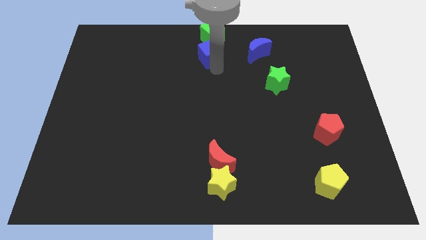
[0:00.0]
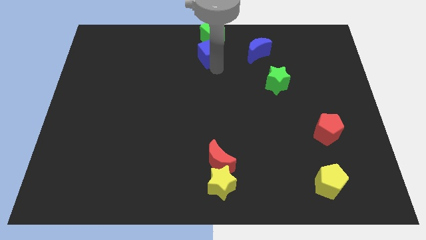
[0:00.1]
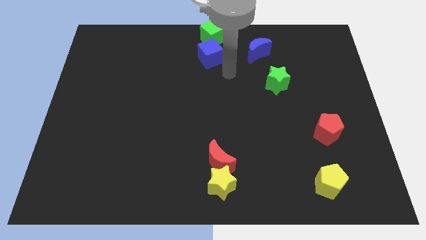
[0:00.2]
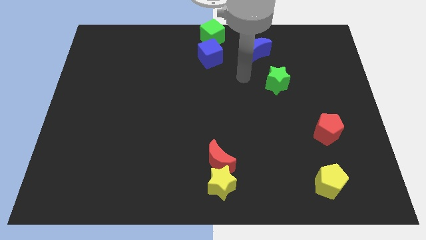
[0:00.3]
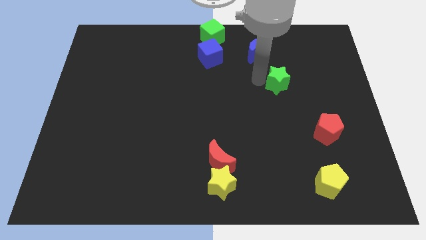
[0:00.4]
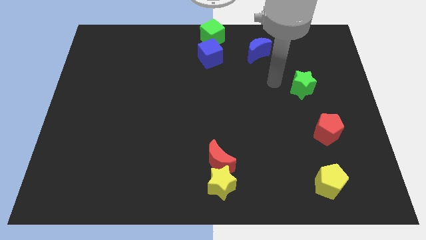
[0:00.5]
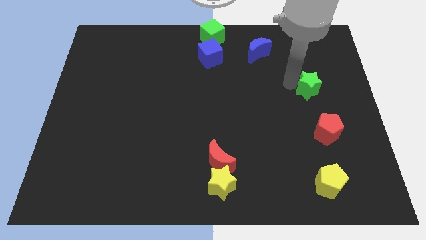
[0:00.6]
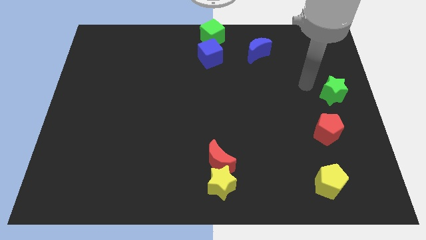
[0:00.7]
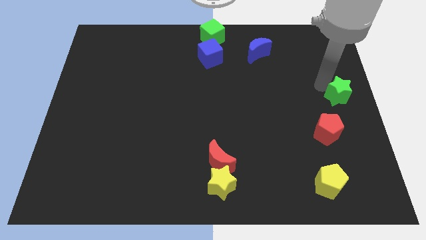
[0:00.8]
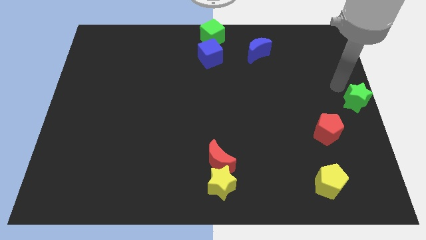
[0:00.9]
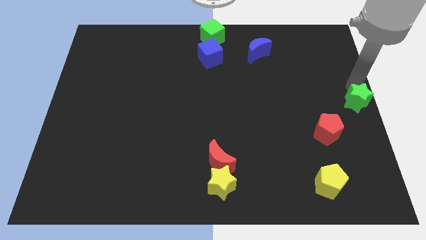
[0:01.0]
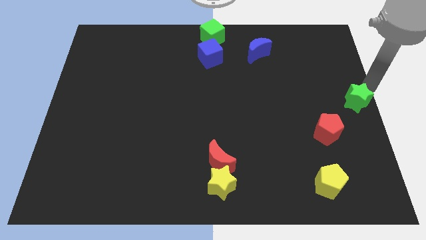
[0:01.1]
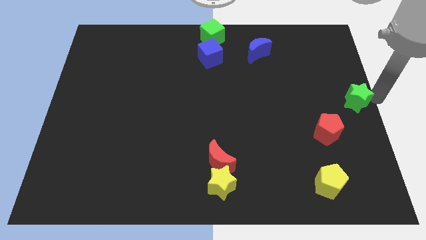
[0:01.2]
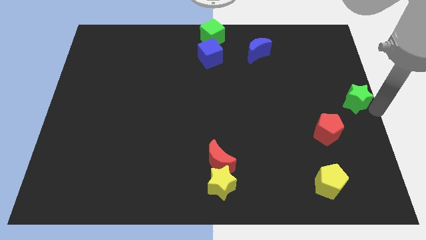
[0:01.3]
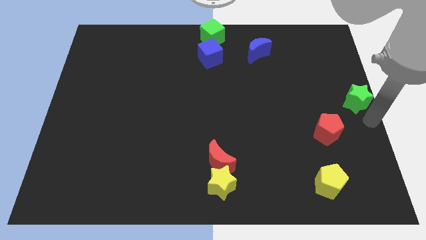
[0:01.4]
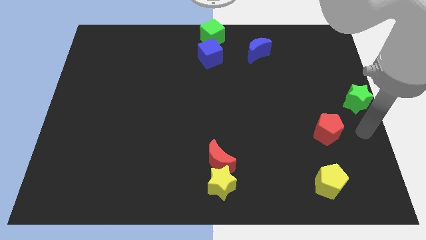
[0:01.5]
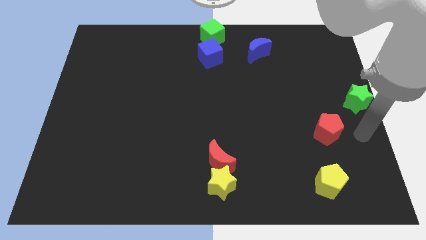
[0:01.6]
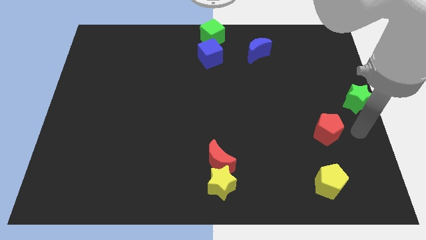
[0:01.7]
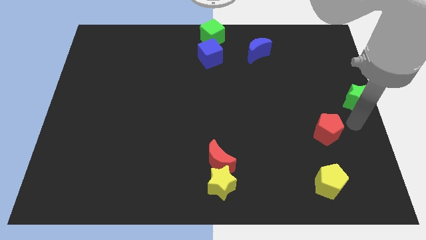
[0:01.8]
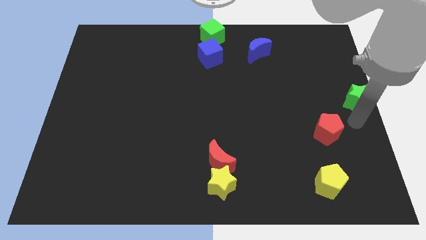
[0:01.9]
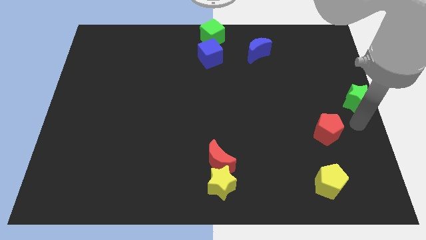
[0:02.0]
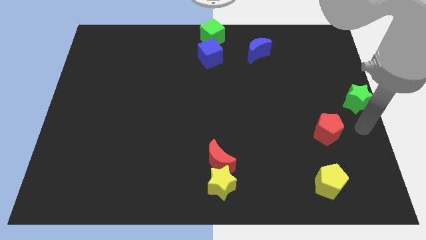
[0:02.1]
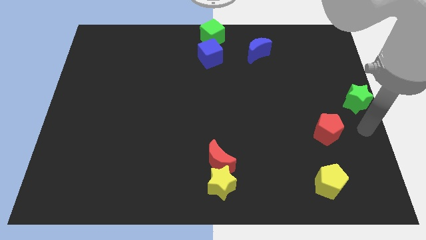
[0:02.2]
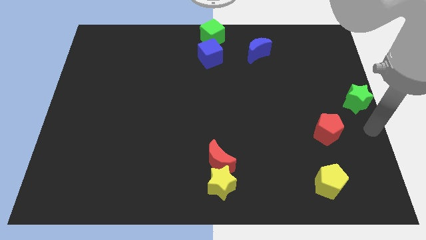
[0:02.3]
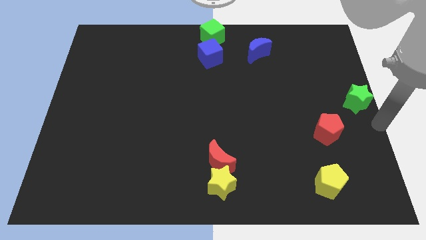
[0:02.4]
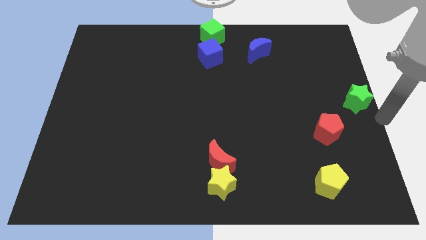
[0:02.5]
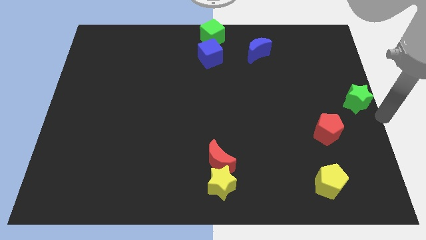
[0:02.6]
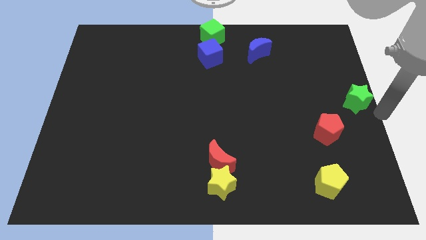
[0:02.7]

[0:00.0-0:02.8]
place the green star to the center right side of the board

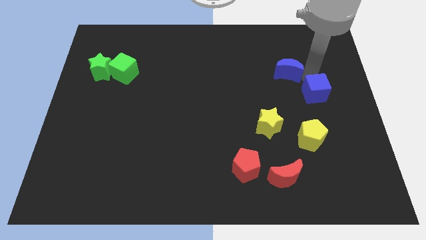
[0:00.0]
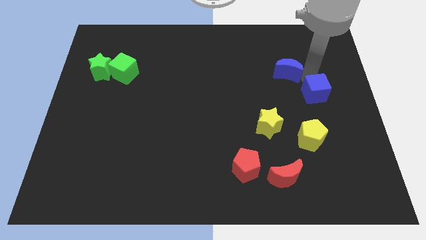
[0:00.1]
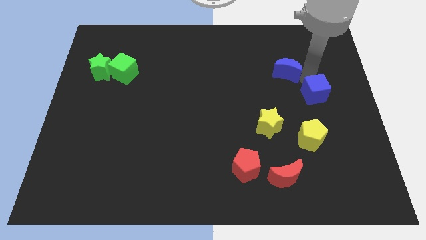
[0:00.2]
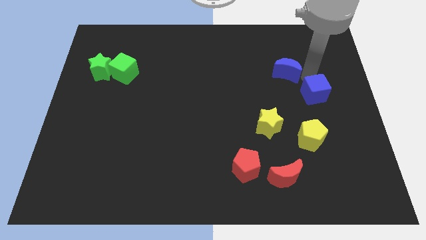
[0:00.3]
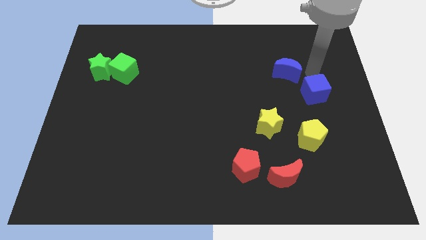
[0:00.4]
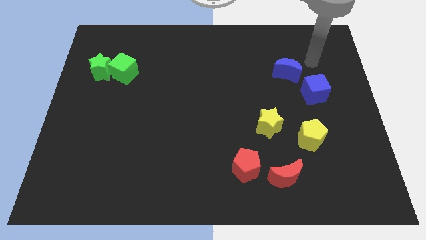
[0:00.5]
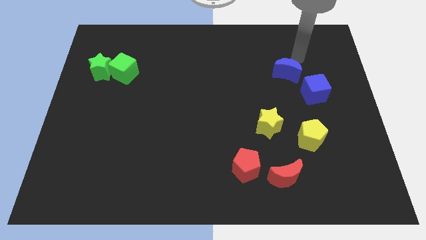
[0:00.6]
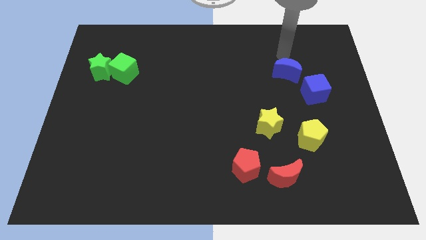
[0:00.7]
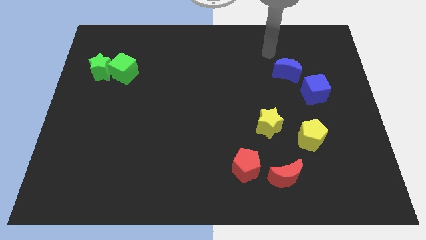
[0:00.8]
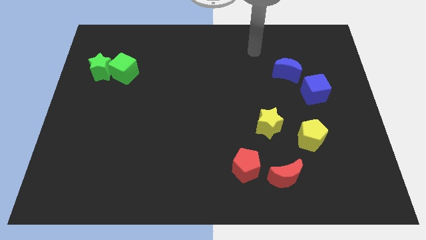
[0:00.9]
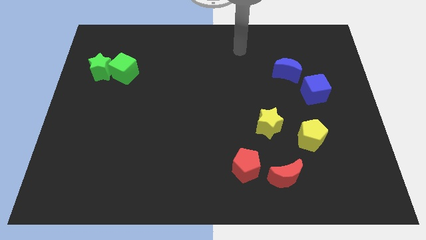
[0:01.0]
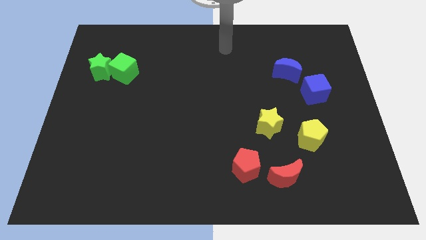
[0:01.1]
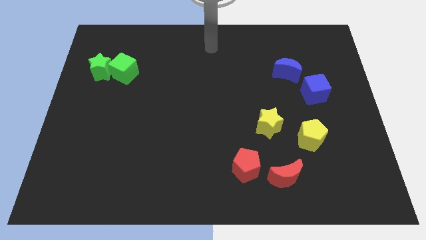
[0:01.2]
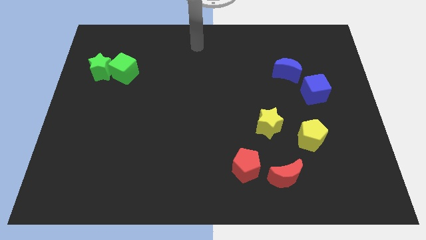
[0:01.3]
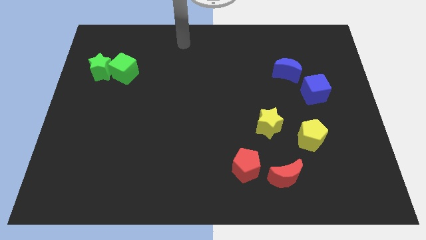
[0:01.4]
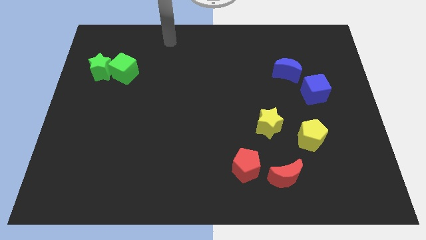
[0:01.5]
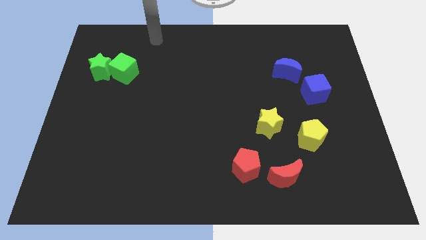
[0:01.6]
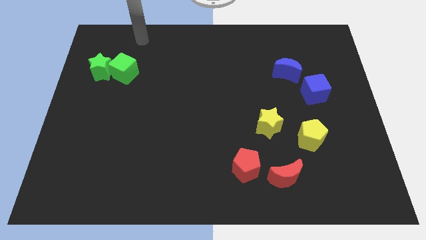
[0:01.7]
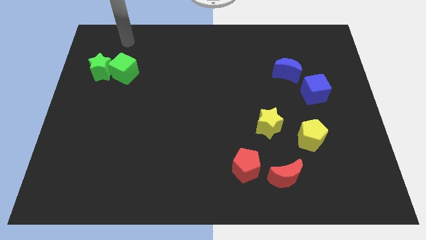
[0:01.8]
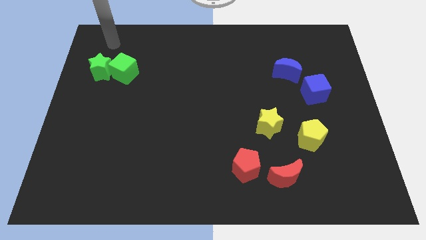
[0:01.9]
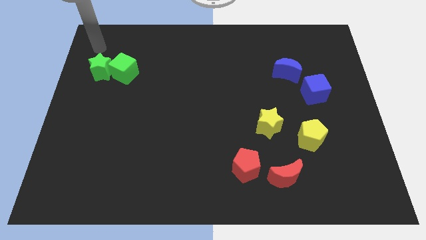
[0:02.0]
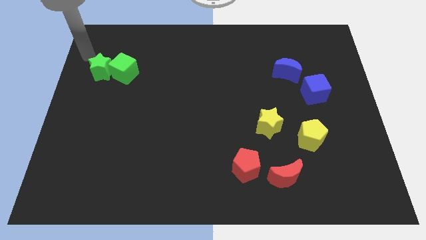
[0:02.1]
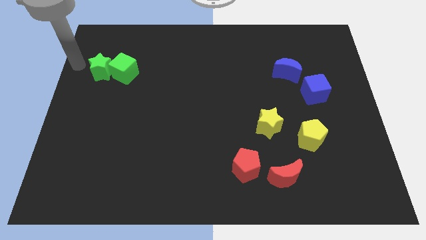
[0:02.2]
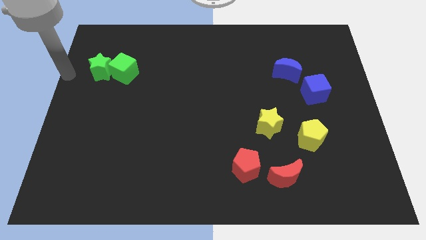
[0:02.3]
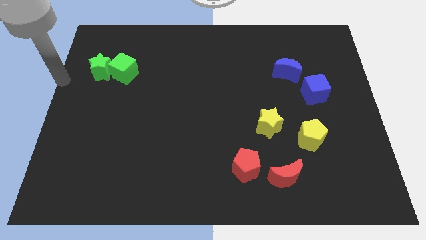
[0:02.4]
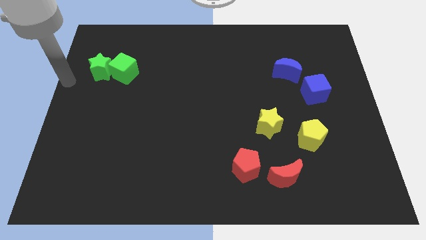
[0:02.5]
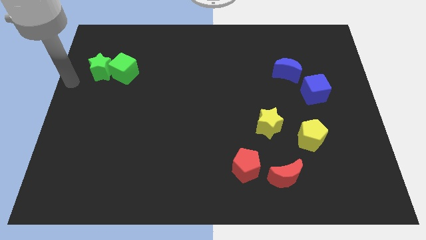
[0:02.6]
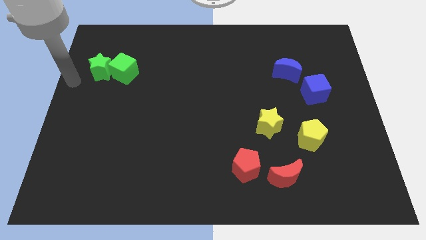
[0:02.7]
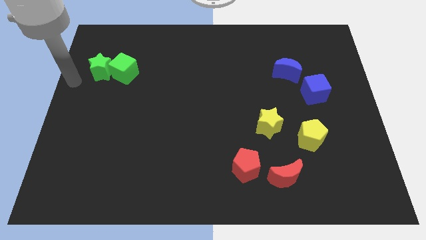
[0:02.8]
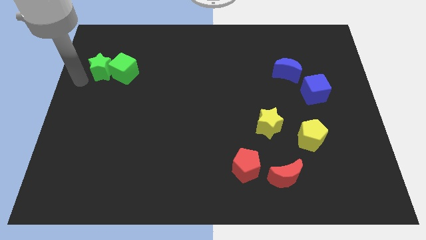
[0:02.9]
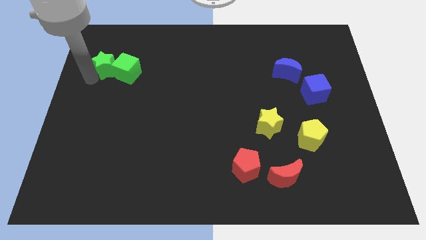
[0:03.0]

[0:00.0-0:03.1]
move your arm away from the blue cube

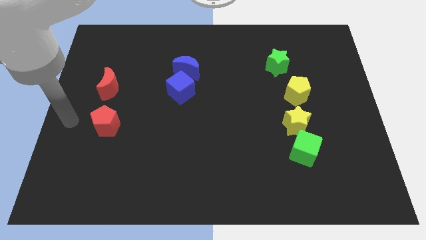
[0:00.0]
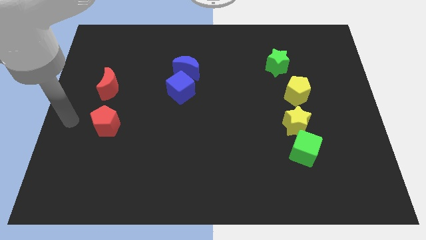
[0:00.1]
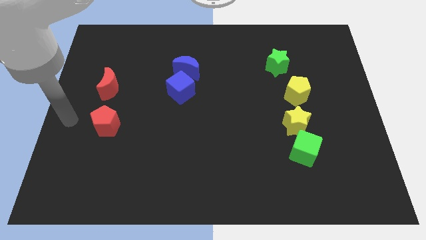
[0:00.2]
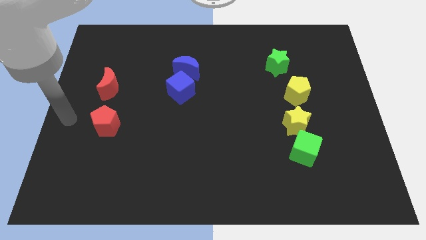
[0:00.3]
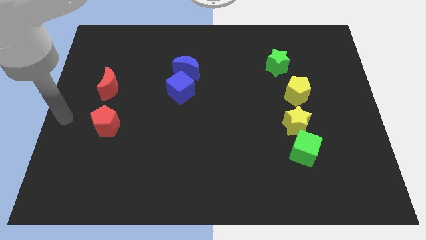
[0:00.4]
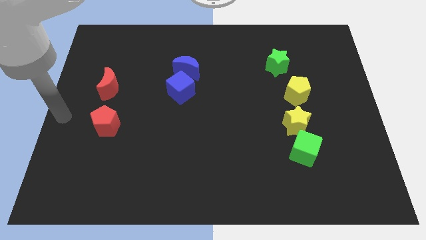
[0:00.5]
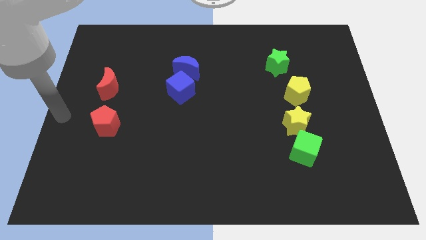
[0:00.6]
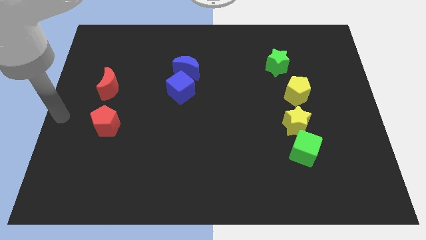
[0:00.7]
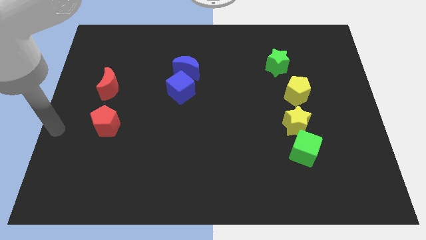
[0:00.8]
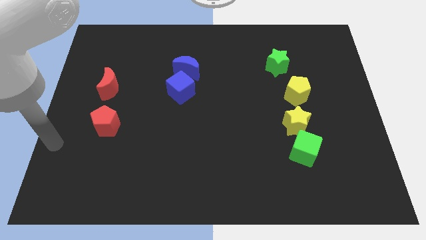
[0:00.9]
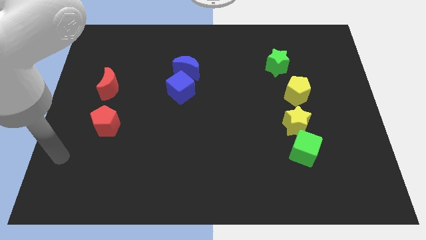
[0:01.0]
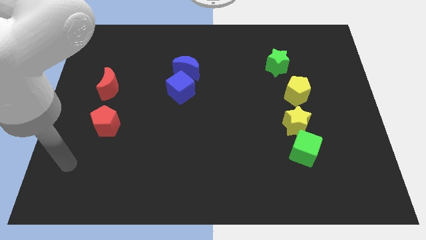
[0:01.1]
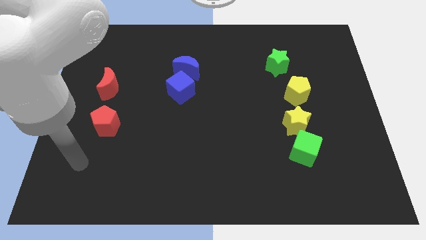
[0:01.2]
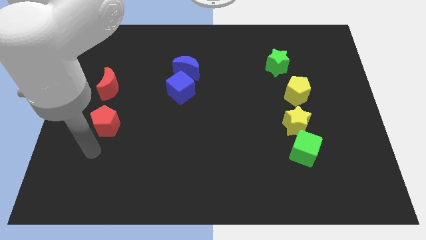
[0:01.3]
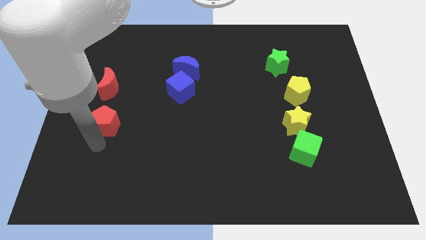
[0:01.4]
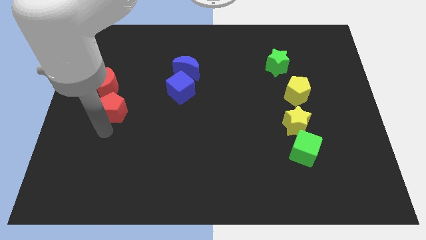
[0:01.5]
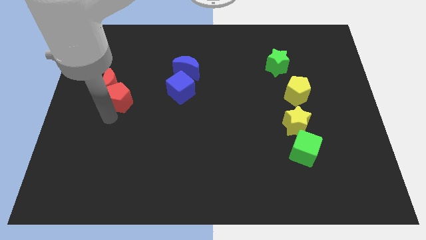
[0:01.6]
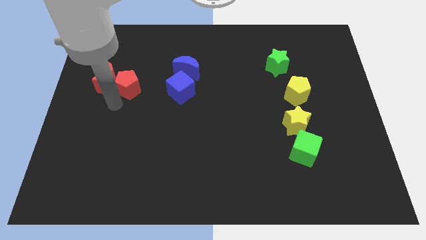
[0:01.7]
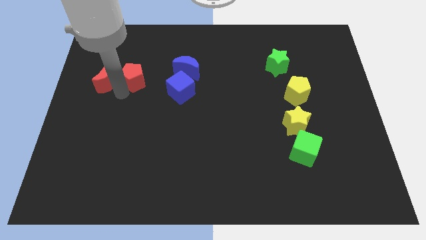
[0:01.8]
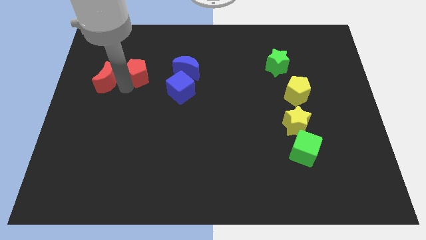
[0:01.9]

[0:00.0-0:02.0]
push the red pentagon to the right side of the red crescent

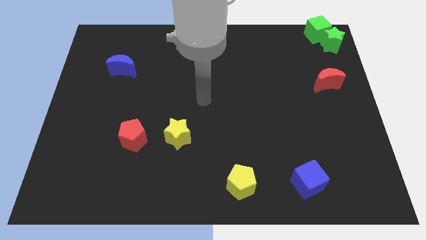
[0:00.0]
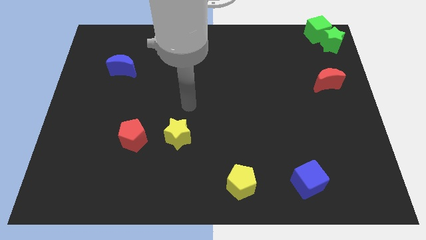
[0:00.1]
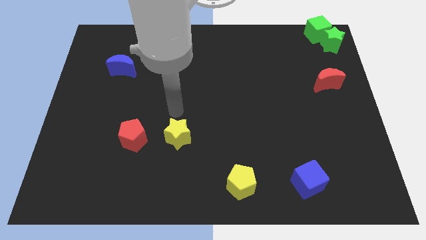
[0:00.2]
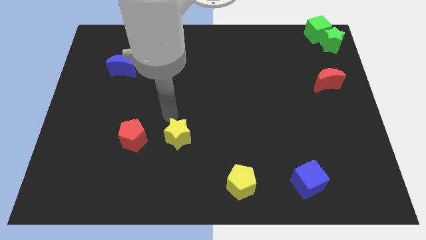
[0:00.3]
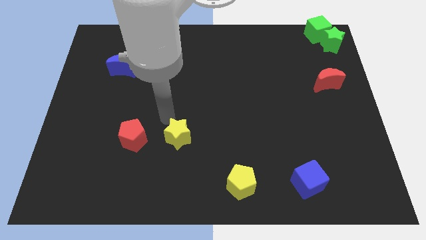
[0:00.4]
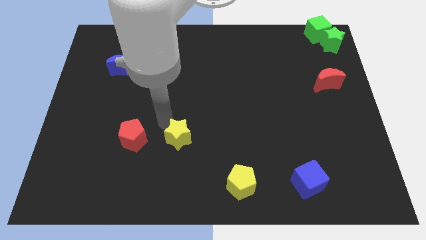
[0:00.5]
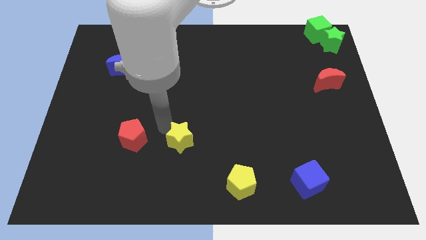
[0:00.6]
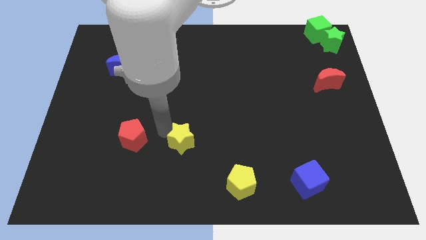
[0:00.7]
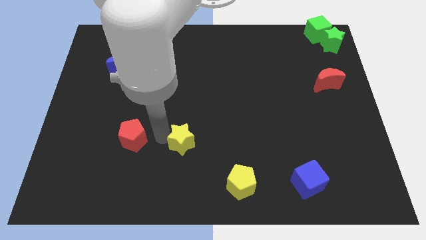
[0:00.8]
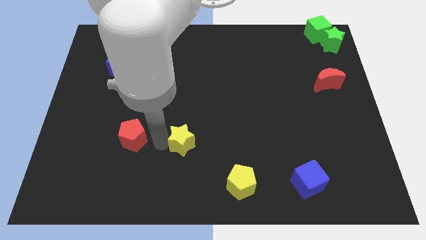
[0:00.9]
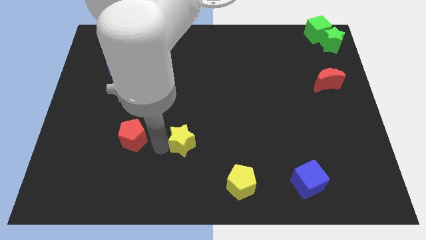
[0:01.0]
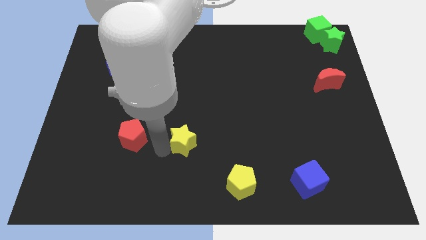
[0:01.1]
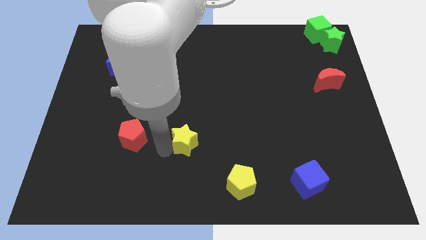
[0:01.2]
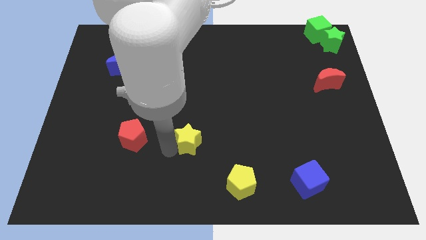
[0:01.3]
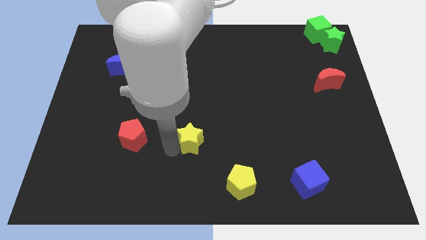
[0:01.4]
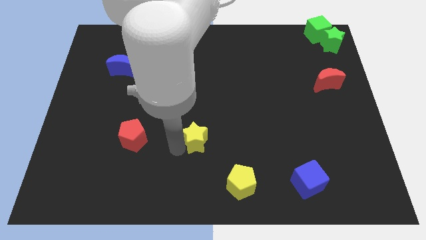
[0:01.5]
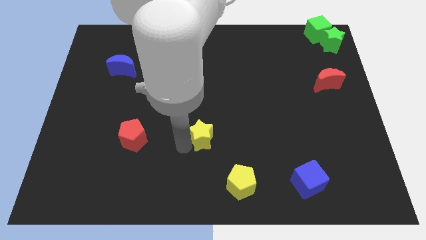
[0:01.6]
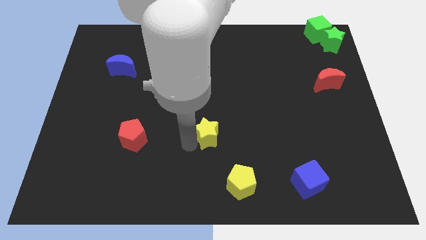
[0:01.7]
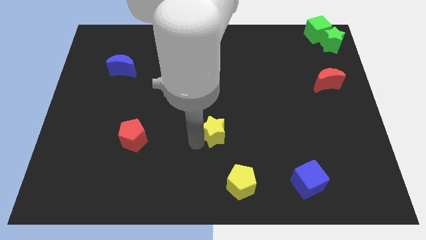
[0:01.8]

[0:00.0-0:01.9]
push the yellow star slightly upwards
